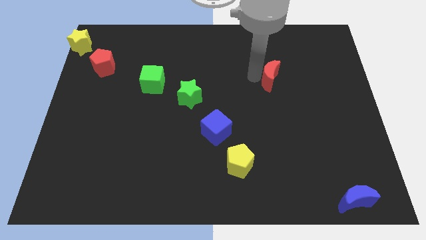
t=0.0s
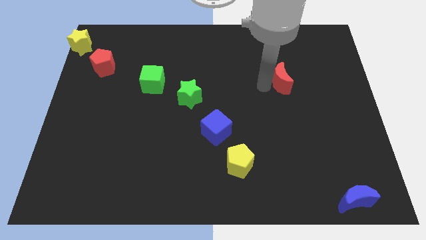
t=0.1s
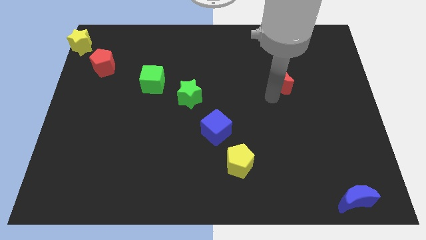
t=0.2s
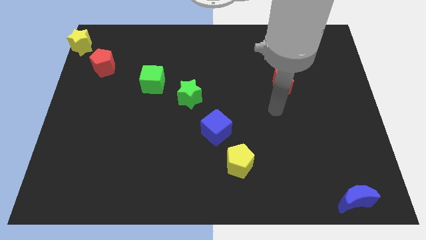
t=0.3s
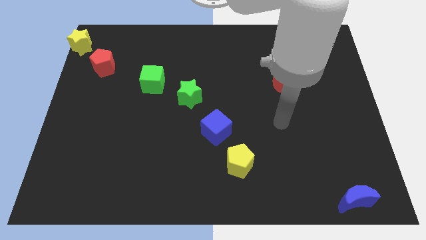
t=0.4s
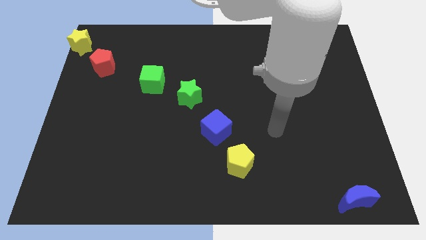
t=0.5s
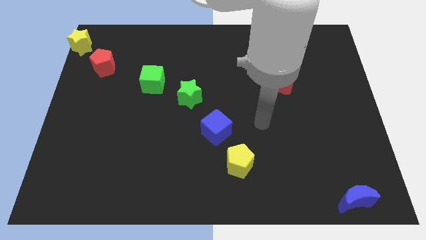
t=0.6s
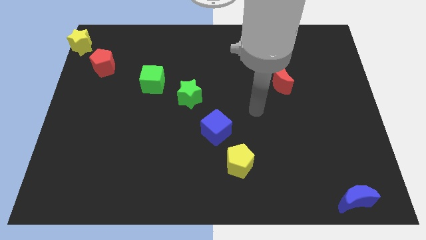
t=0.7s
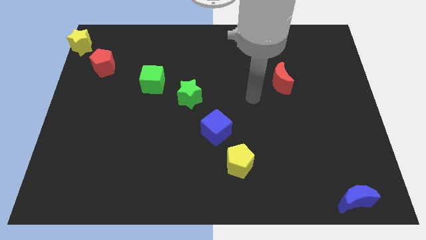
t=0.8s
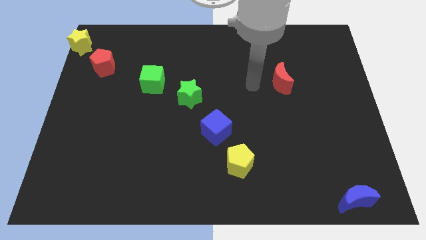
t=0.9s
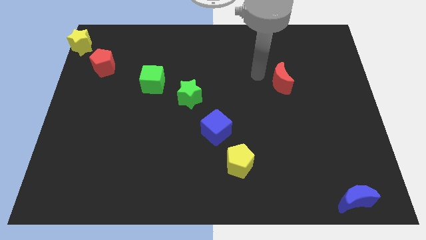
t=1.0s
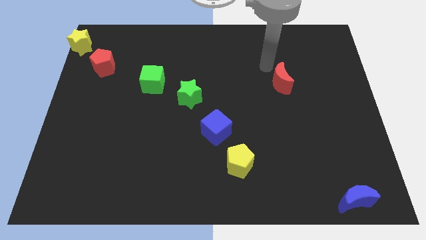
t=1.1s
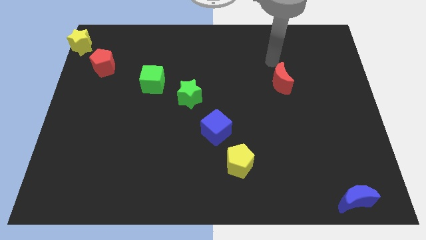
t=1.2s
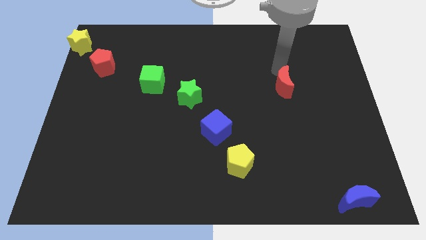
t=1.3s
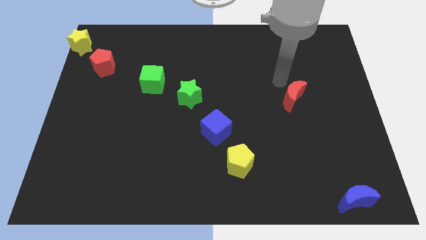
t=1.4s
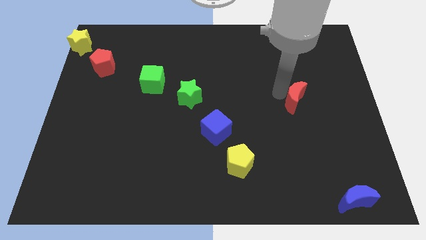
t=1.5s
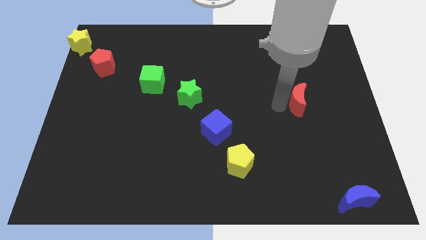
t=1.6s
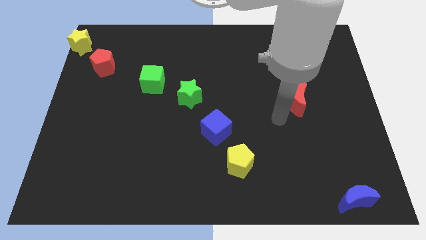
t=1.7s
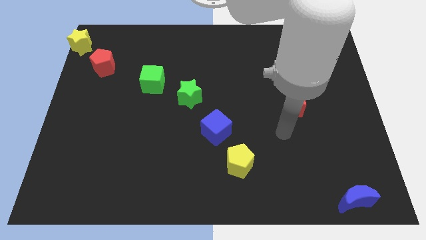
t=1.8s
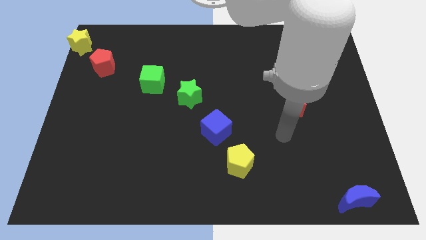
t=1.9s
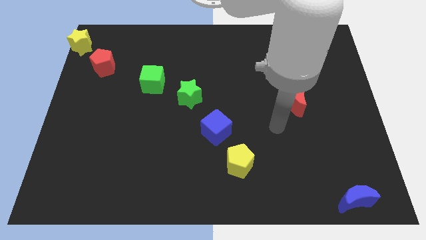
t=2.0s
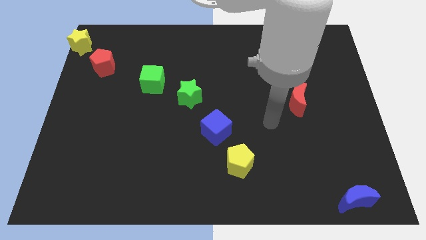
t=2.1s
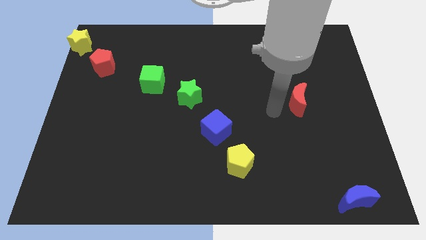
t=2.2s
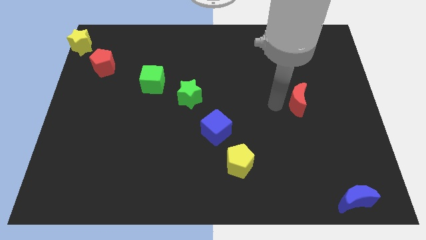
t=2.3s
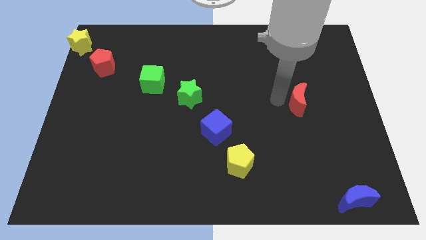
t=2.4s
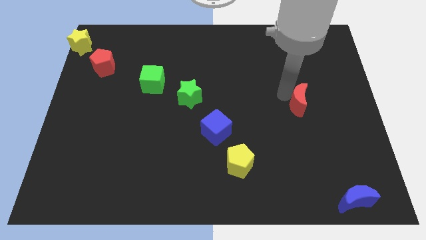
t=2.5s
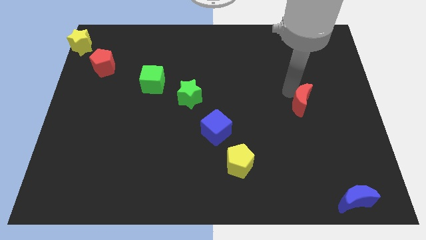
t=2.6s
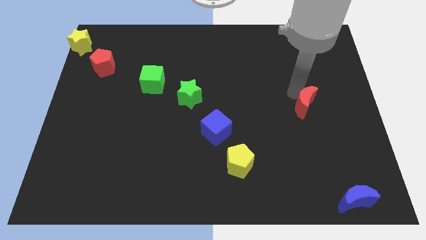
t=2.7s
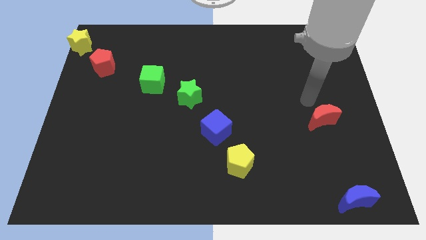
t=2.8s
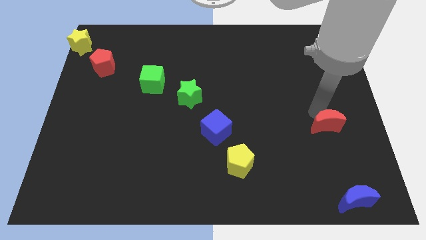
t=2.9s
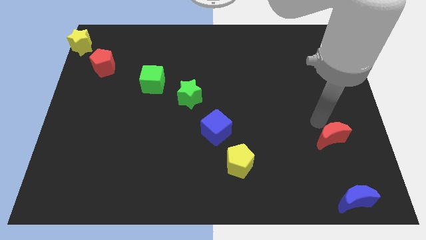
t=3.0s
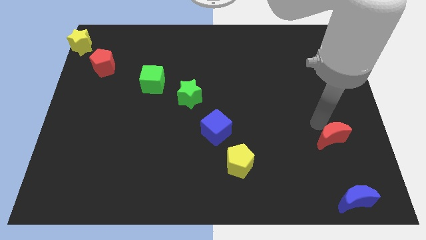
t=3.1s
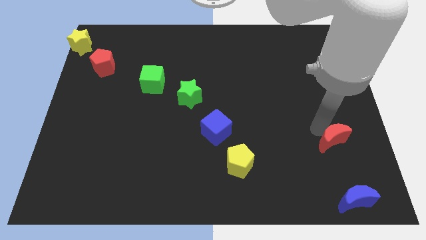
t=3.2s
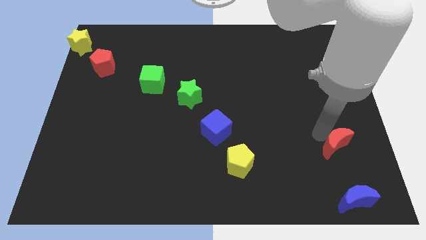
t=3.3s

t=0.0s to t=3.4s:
slide the red crescent to the top of blue crescent

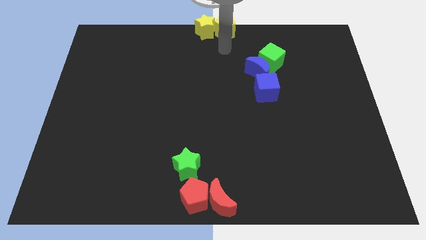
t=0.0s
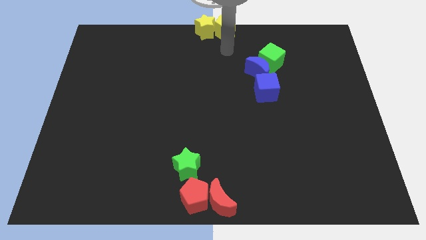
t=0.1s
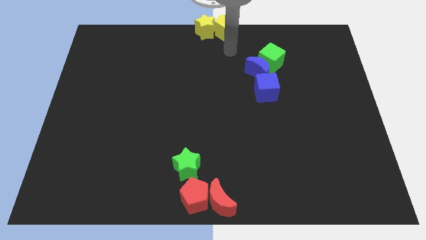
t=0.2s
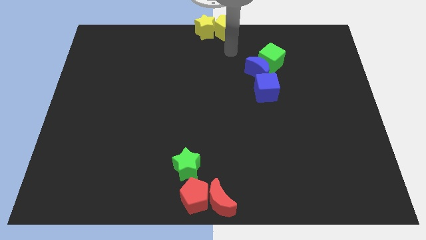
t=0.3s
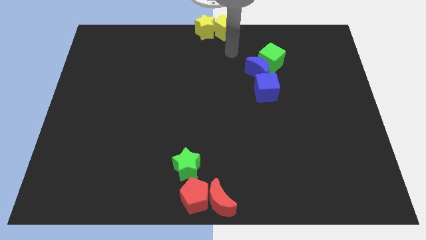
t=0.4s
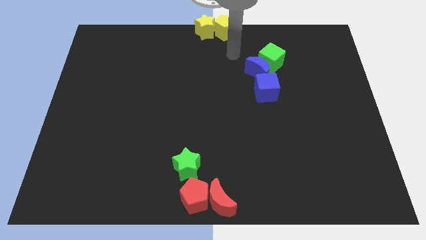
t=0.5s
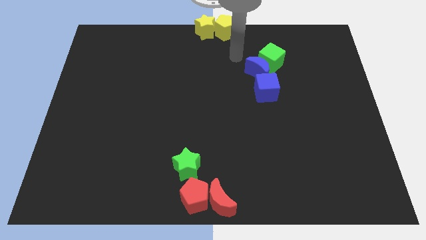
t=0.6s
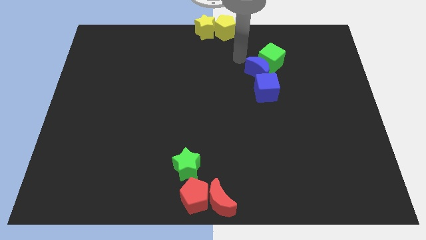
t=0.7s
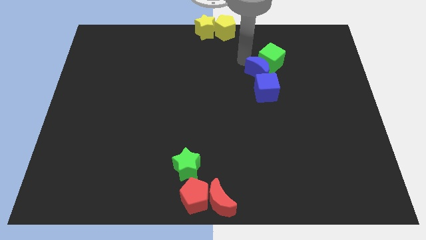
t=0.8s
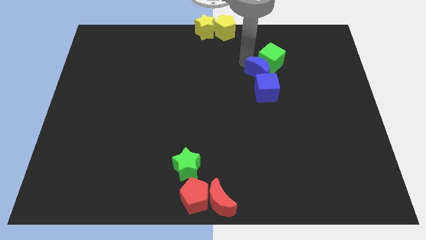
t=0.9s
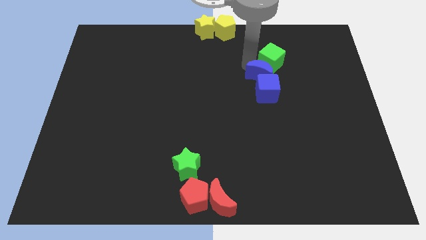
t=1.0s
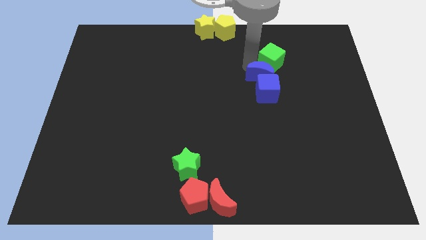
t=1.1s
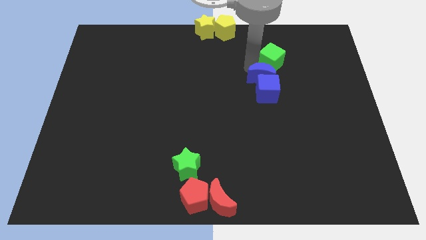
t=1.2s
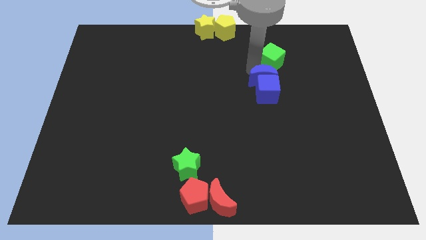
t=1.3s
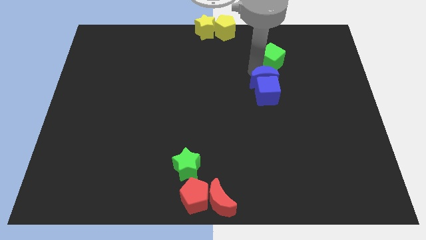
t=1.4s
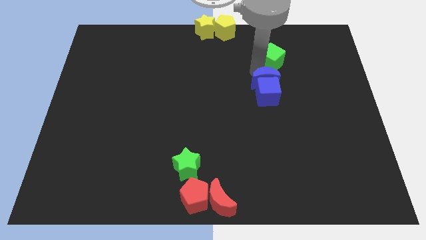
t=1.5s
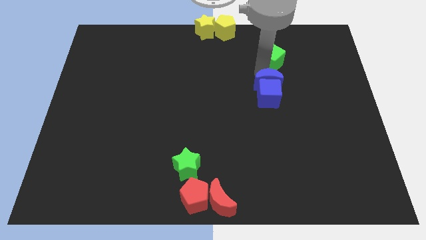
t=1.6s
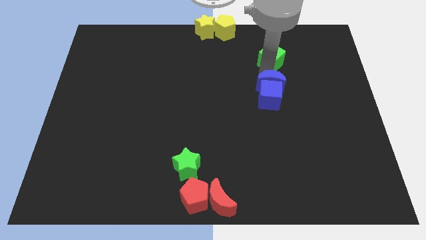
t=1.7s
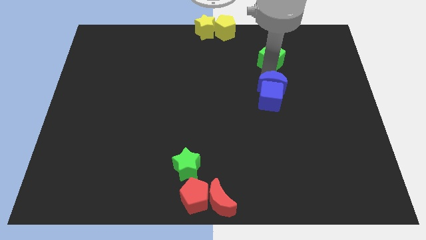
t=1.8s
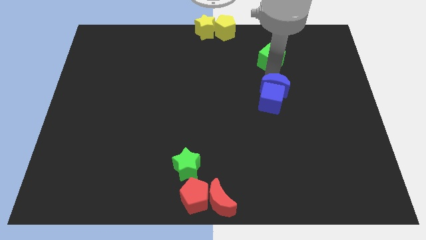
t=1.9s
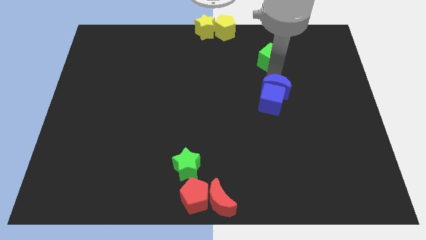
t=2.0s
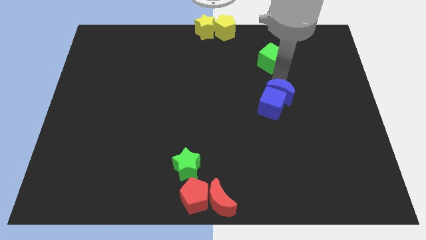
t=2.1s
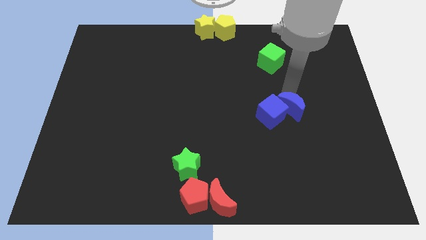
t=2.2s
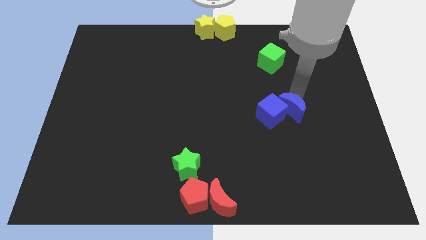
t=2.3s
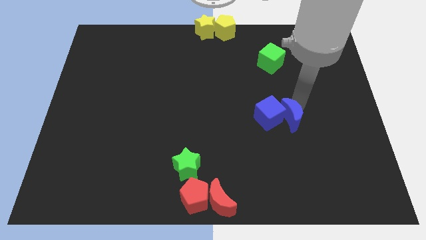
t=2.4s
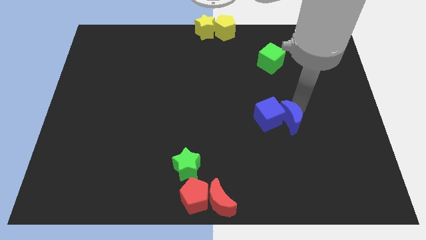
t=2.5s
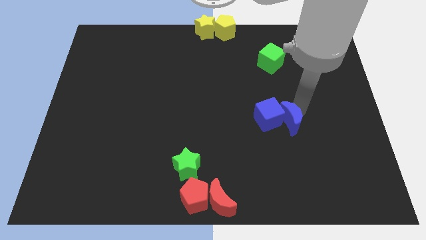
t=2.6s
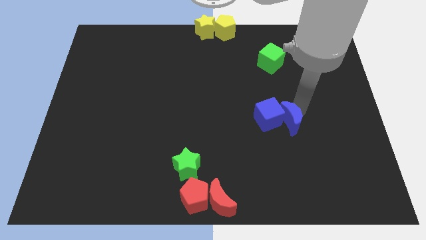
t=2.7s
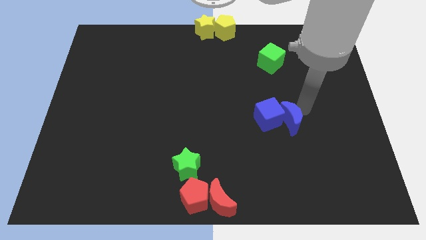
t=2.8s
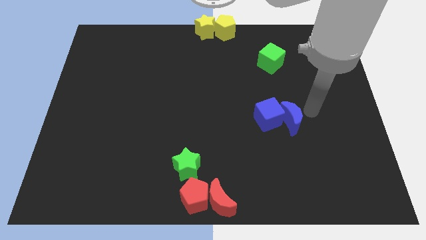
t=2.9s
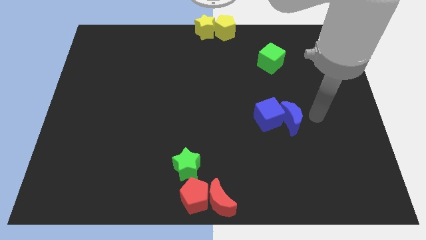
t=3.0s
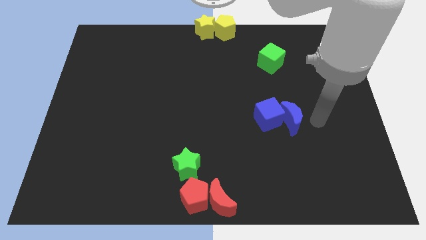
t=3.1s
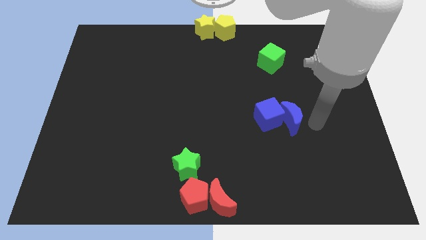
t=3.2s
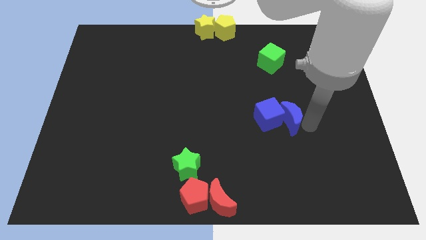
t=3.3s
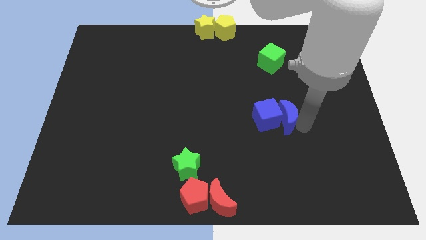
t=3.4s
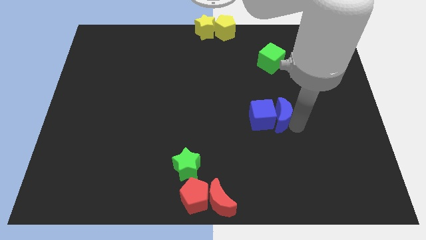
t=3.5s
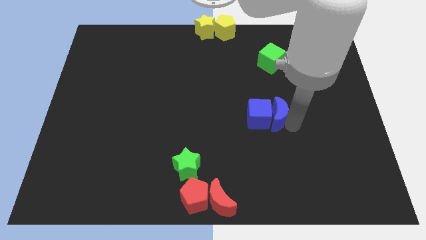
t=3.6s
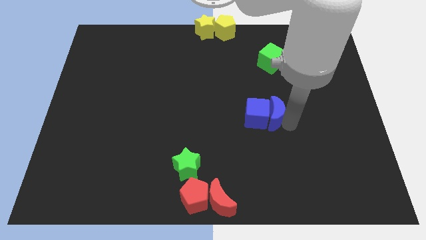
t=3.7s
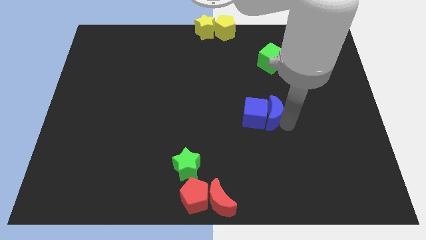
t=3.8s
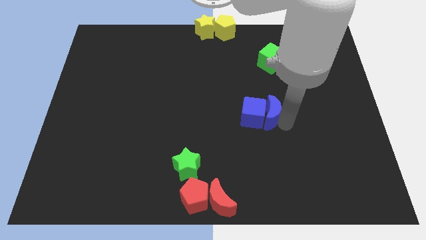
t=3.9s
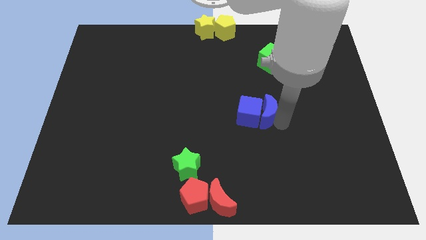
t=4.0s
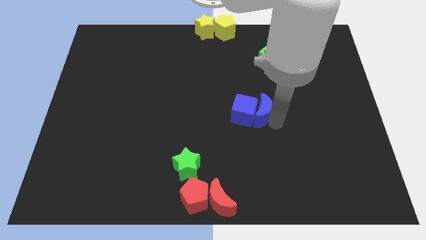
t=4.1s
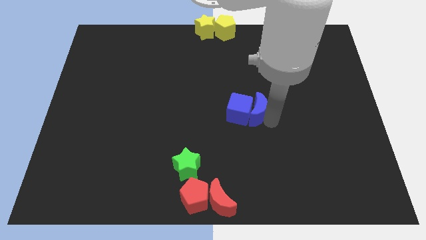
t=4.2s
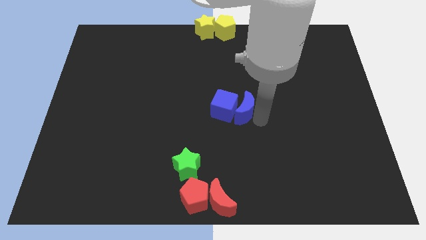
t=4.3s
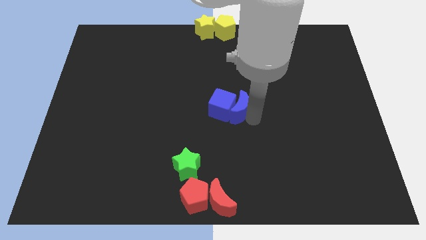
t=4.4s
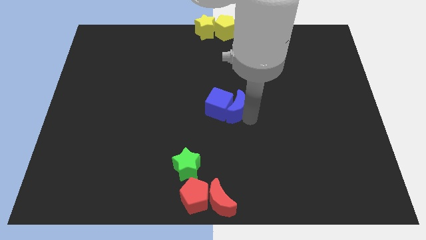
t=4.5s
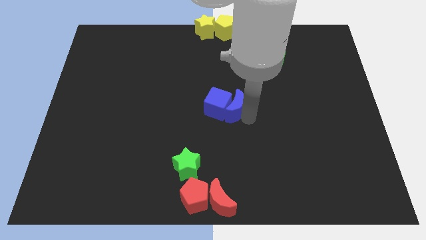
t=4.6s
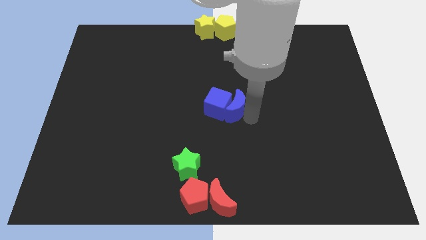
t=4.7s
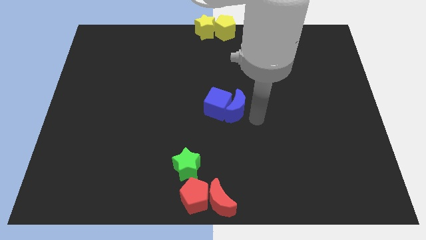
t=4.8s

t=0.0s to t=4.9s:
push the blue moon and blue cube to the center of the board

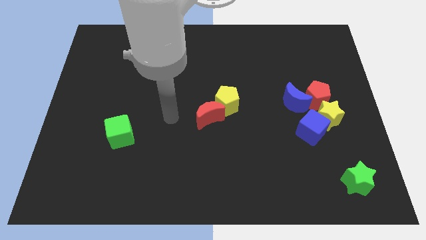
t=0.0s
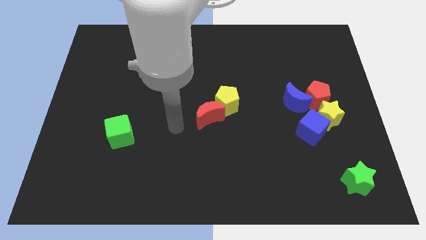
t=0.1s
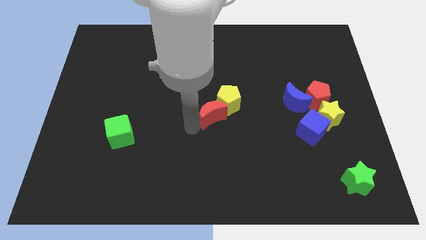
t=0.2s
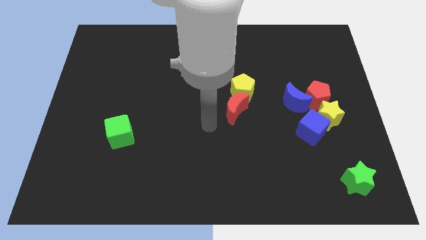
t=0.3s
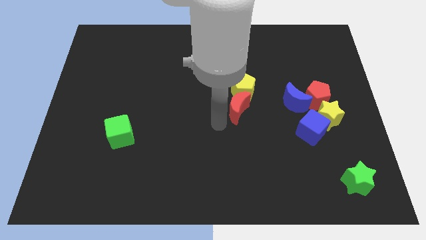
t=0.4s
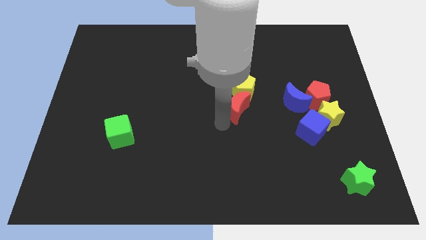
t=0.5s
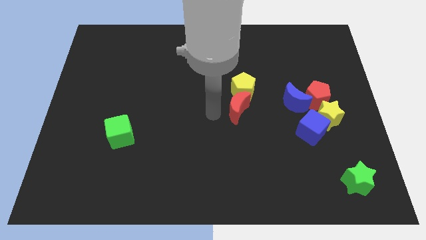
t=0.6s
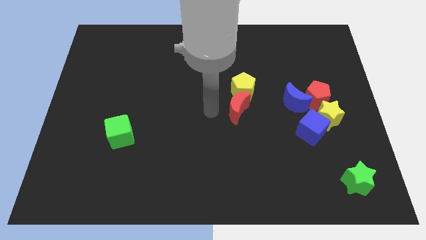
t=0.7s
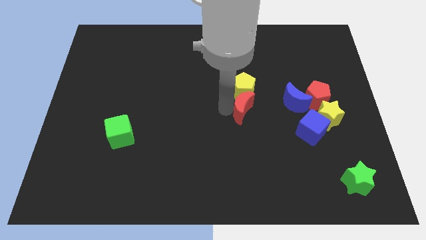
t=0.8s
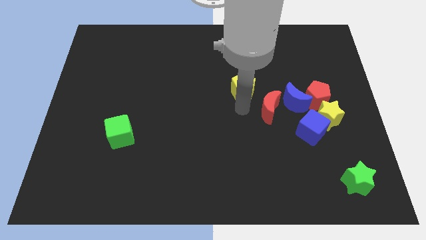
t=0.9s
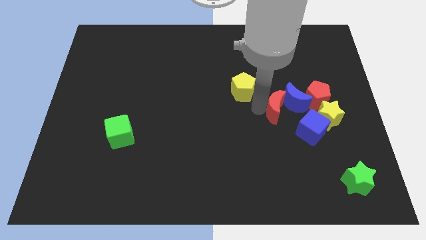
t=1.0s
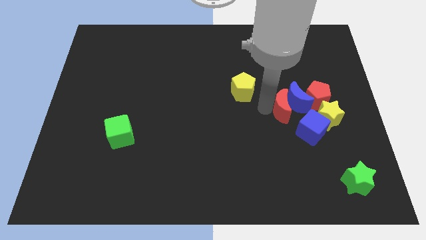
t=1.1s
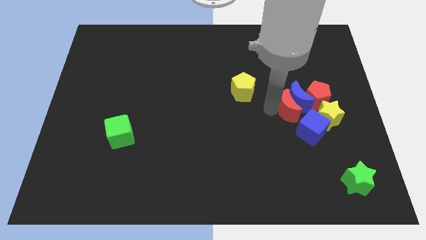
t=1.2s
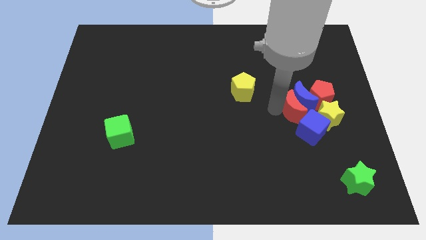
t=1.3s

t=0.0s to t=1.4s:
push the red crescent into the left side of the blue crescent
